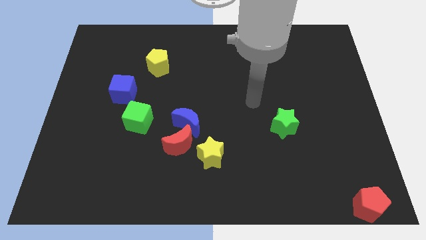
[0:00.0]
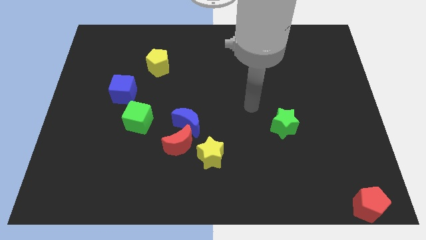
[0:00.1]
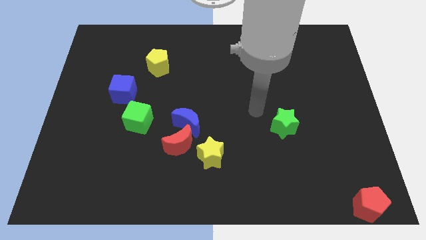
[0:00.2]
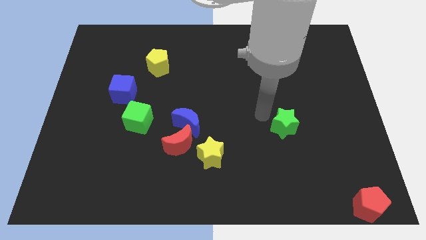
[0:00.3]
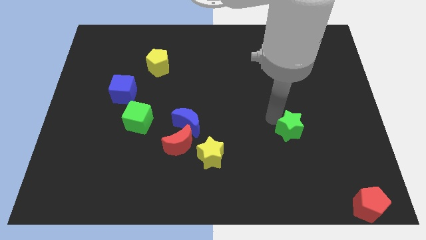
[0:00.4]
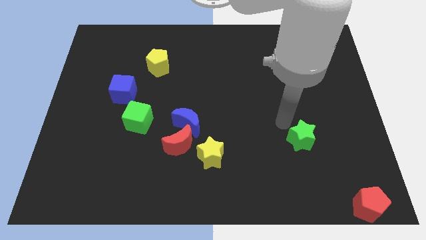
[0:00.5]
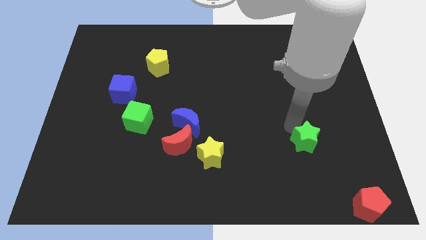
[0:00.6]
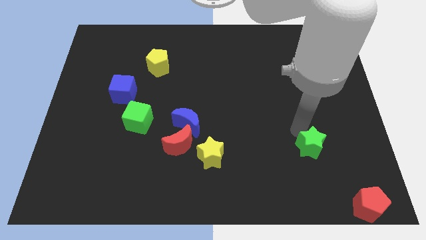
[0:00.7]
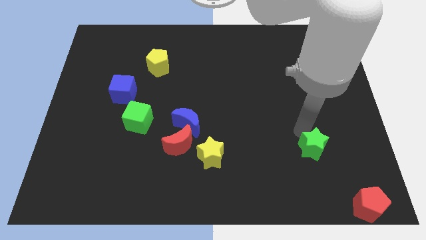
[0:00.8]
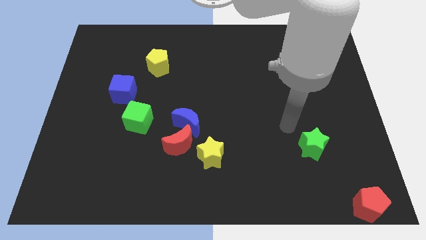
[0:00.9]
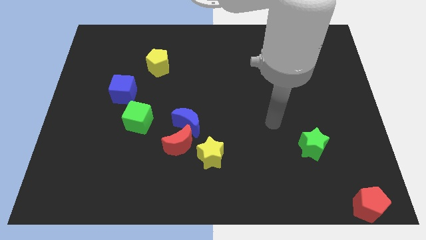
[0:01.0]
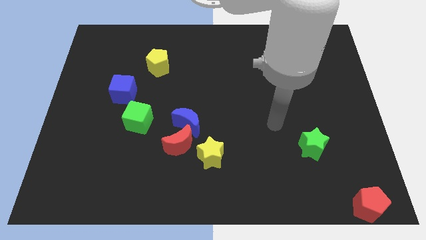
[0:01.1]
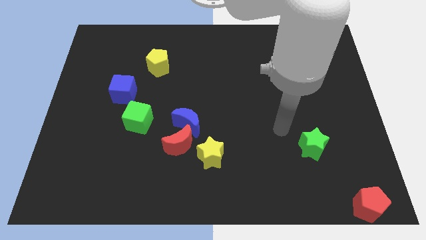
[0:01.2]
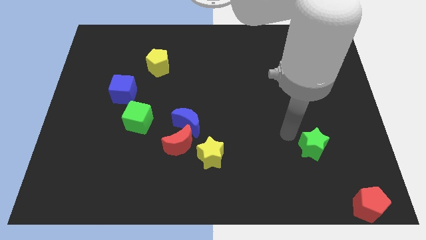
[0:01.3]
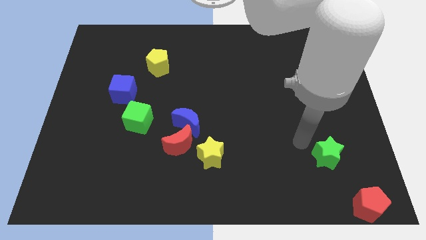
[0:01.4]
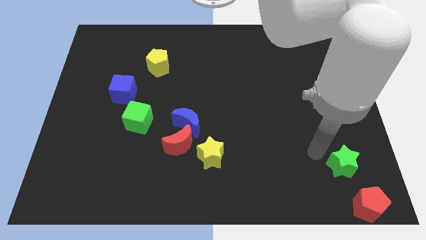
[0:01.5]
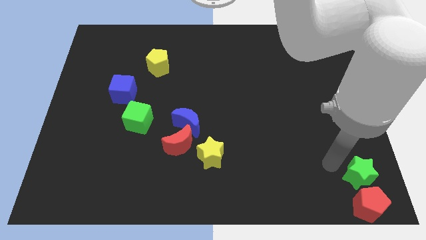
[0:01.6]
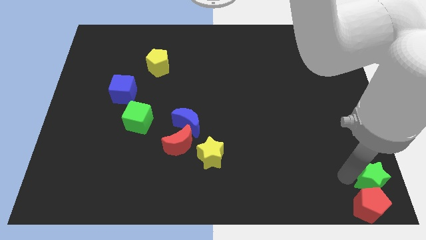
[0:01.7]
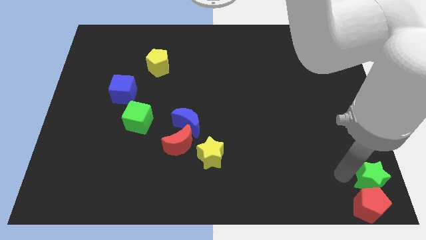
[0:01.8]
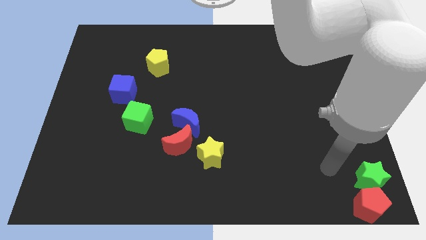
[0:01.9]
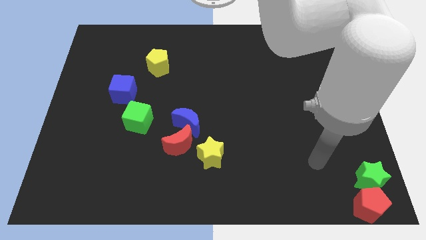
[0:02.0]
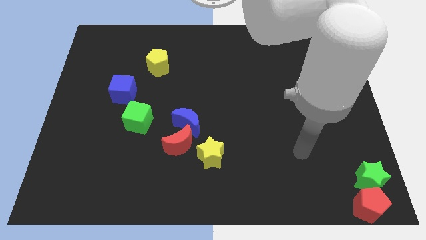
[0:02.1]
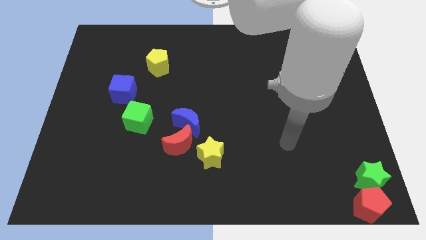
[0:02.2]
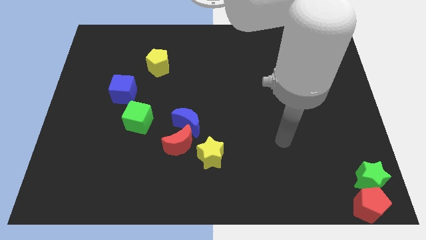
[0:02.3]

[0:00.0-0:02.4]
push green star into red pentagon

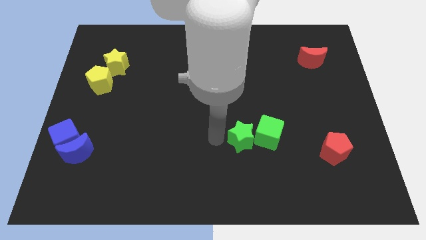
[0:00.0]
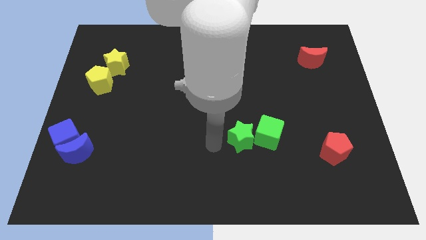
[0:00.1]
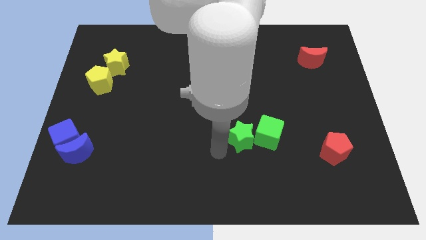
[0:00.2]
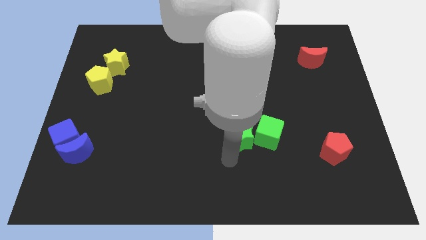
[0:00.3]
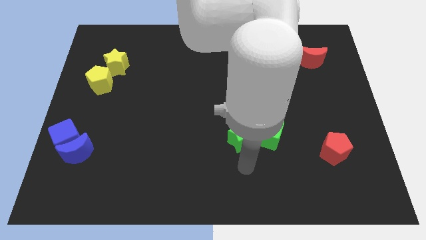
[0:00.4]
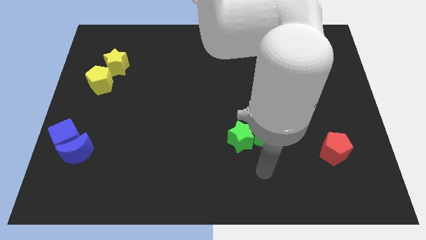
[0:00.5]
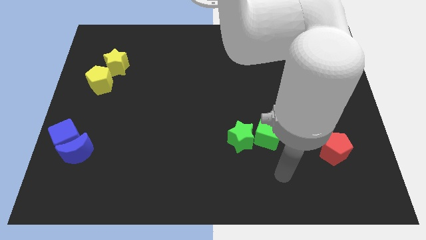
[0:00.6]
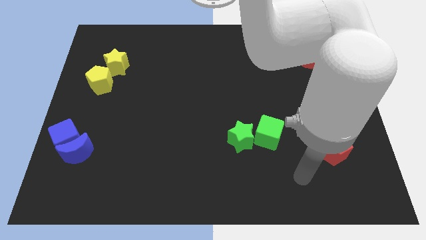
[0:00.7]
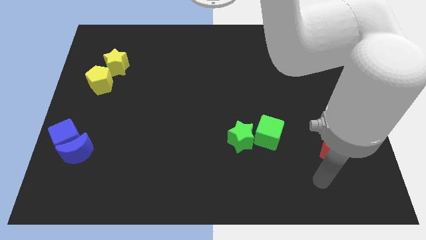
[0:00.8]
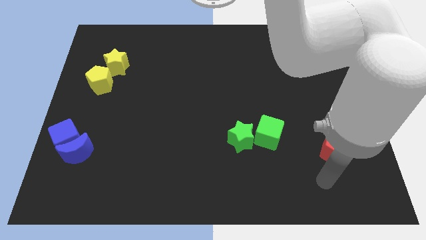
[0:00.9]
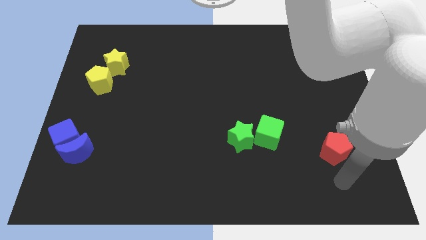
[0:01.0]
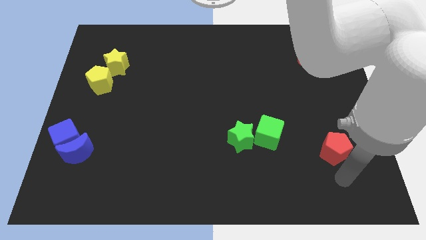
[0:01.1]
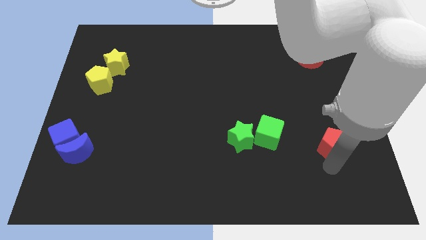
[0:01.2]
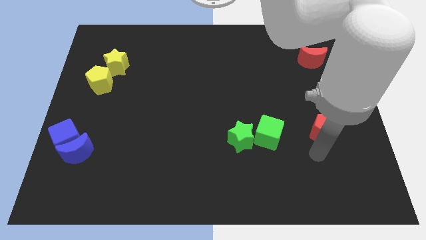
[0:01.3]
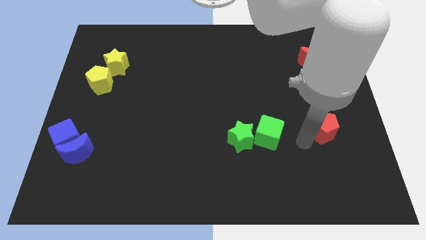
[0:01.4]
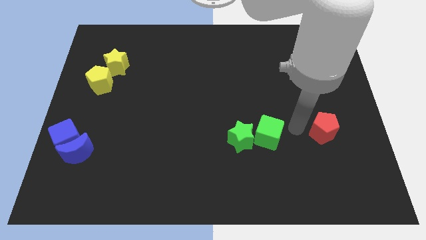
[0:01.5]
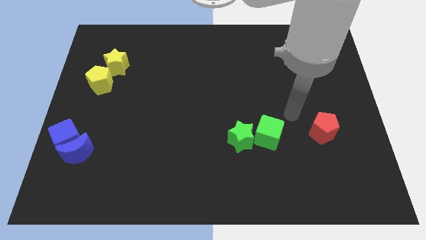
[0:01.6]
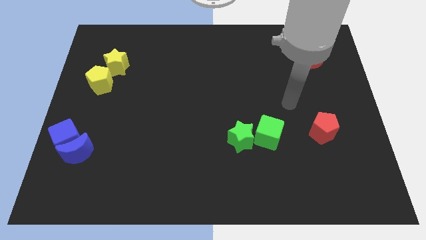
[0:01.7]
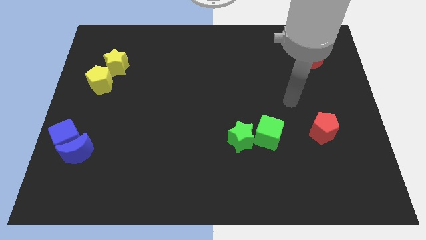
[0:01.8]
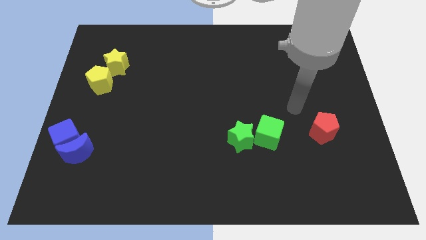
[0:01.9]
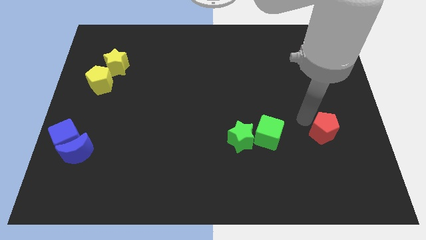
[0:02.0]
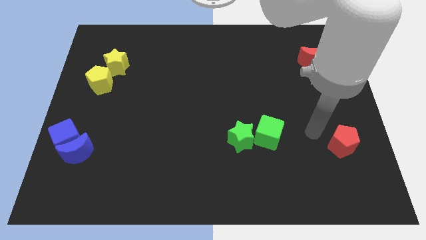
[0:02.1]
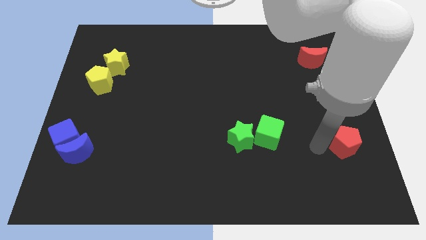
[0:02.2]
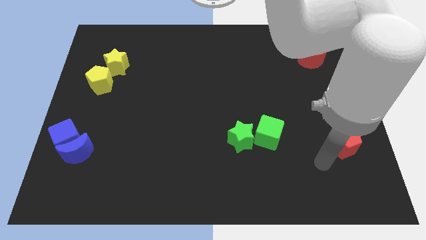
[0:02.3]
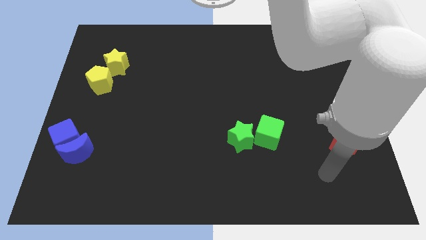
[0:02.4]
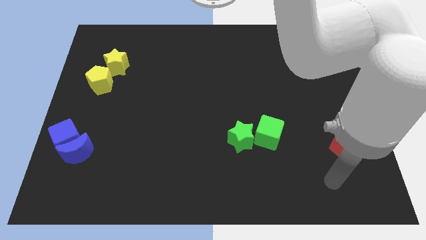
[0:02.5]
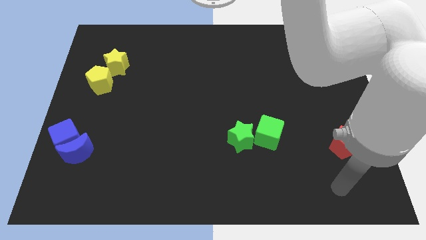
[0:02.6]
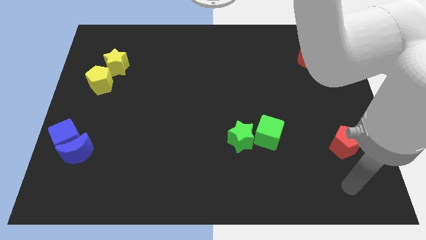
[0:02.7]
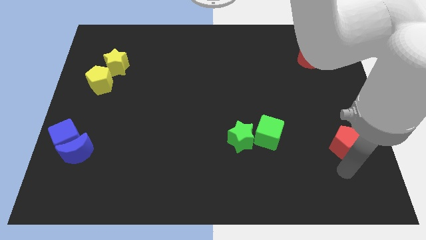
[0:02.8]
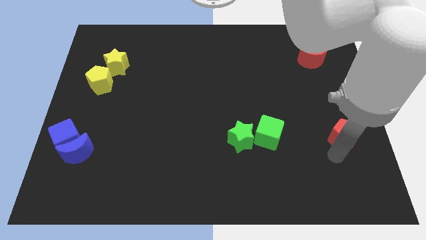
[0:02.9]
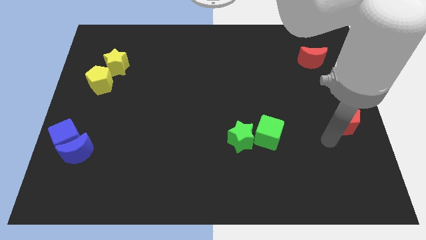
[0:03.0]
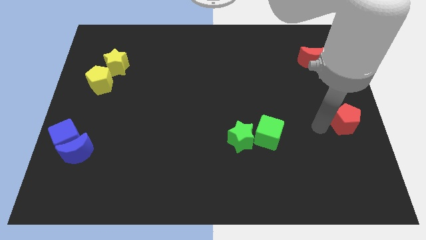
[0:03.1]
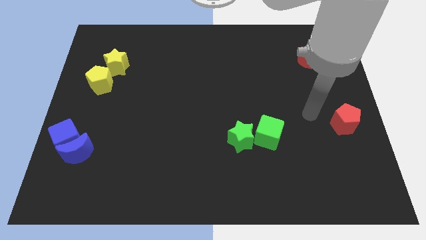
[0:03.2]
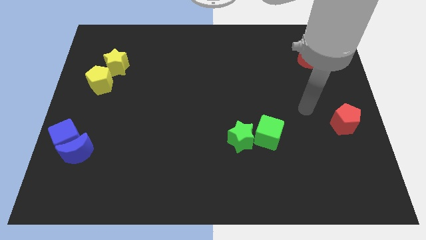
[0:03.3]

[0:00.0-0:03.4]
push the red pentagon towards the top side of the board

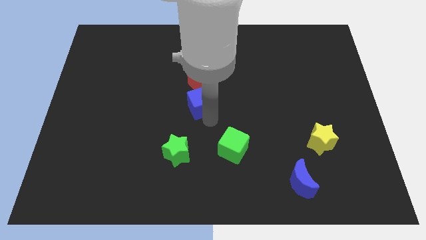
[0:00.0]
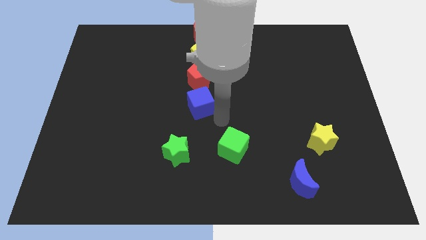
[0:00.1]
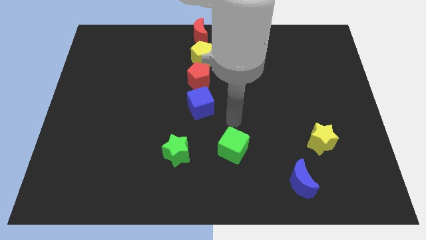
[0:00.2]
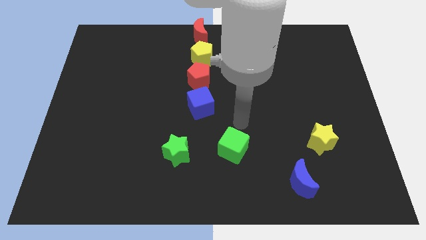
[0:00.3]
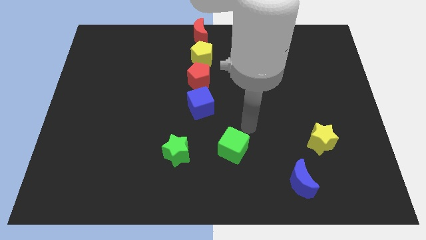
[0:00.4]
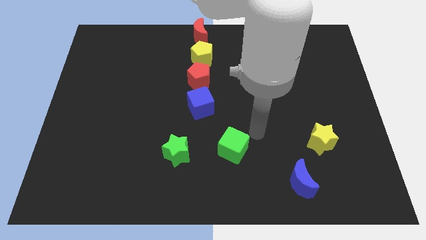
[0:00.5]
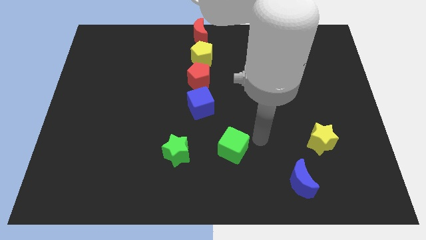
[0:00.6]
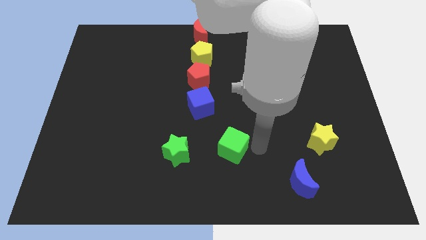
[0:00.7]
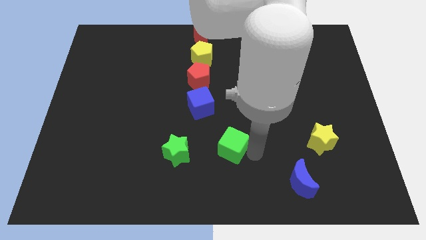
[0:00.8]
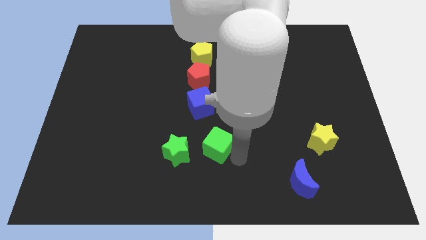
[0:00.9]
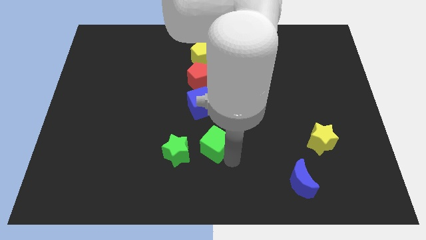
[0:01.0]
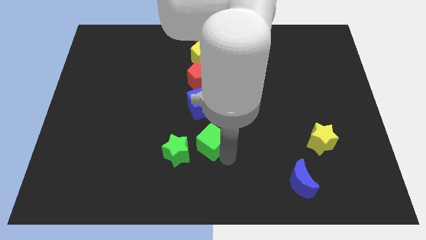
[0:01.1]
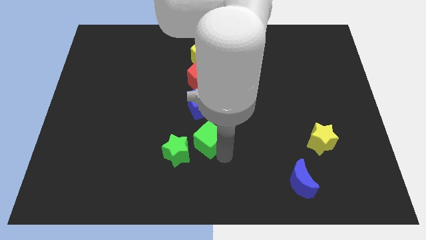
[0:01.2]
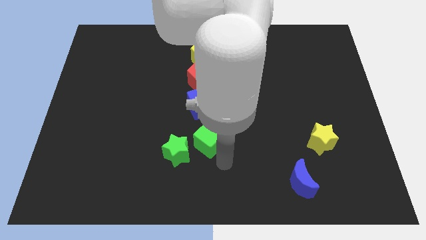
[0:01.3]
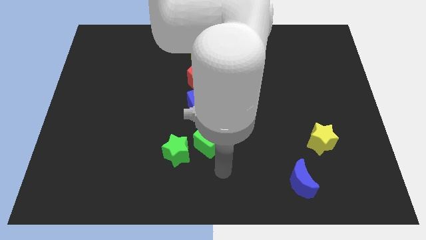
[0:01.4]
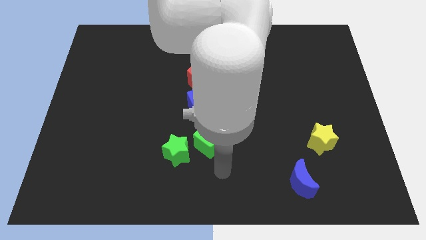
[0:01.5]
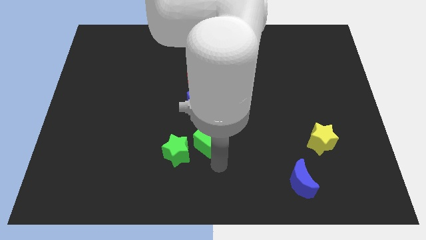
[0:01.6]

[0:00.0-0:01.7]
place the green cube right of green star

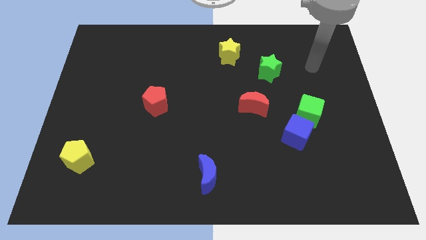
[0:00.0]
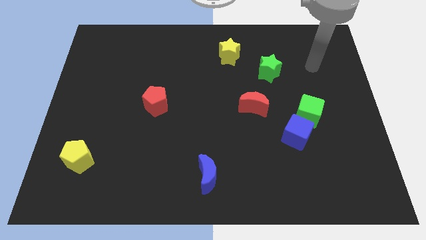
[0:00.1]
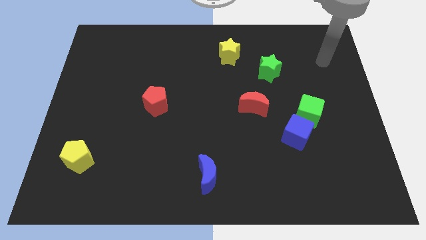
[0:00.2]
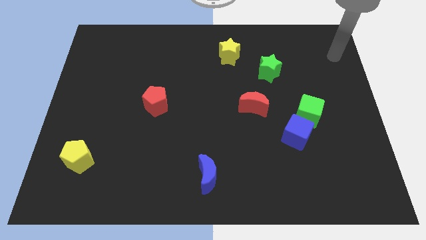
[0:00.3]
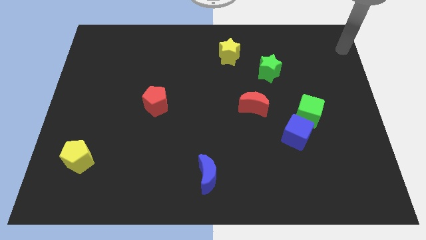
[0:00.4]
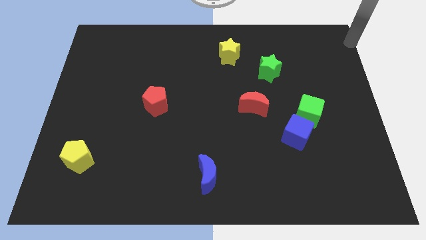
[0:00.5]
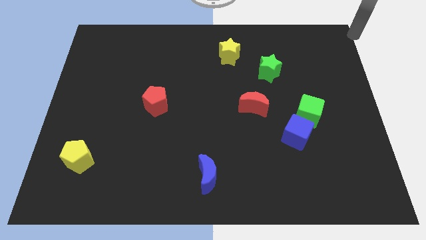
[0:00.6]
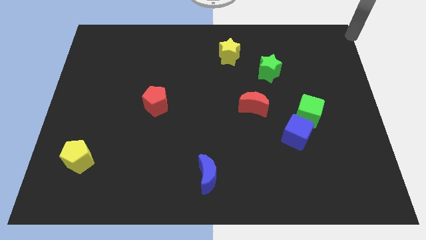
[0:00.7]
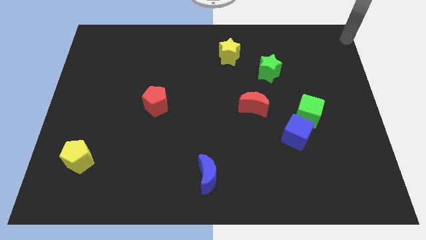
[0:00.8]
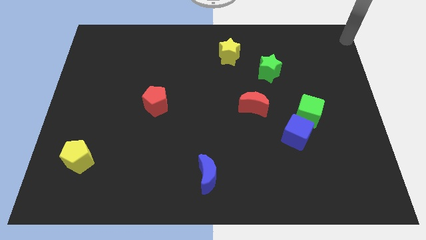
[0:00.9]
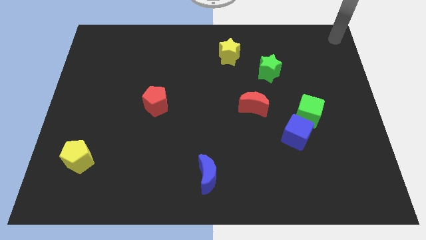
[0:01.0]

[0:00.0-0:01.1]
place your hand at the top right corner

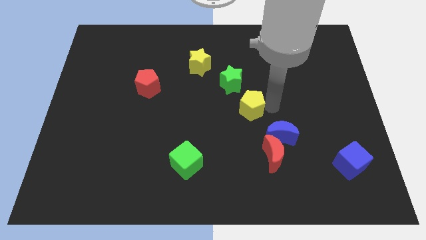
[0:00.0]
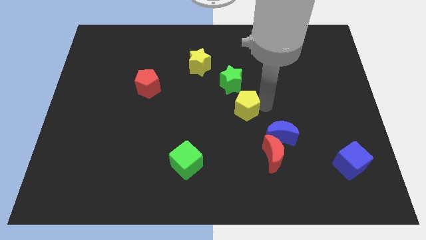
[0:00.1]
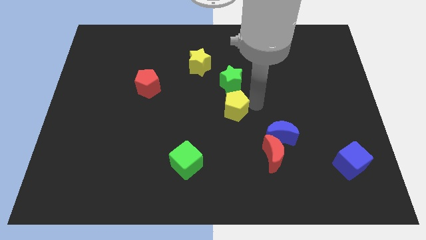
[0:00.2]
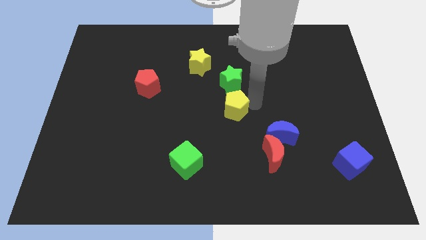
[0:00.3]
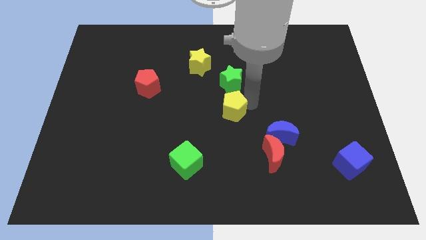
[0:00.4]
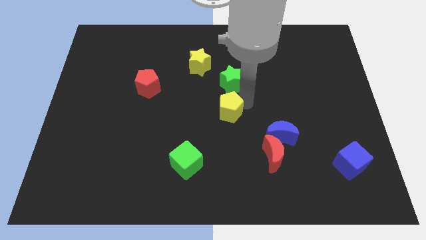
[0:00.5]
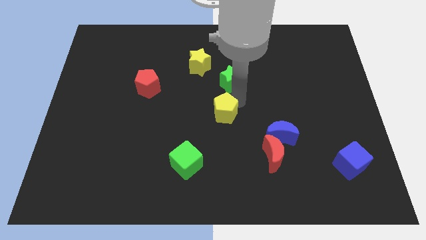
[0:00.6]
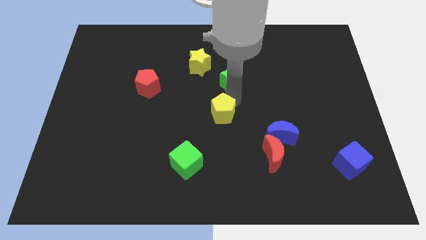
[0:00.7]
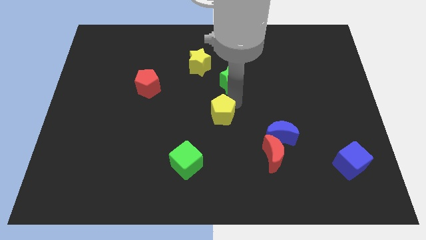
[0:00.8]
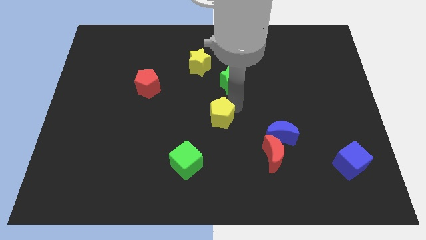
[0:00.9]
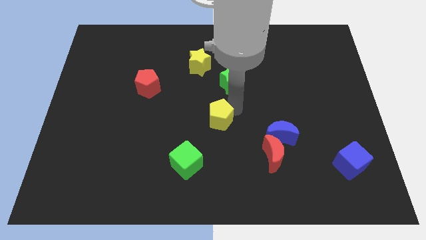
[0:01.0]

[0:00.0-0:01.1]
push yellow pentagon to left side
